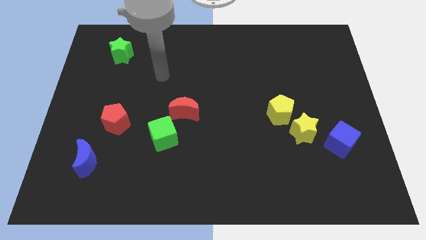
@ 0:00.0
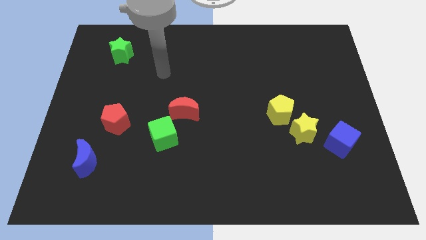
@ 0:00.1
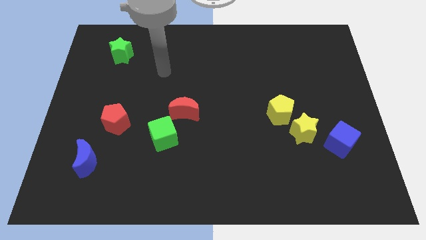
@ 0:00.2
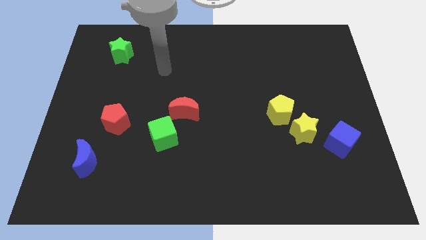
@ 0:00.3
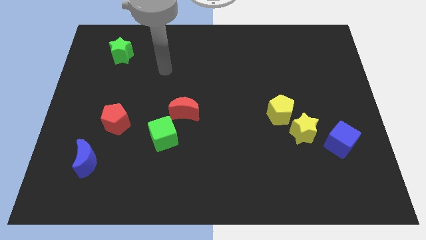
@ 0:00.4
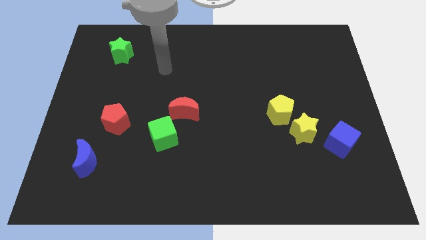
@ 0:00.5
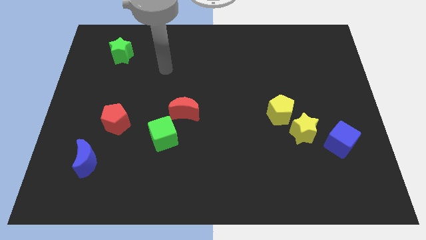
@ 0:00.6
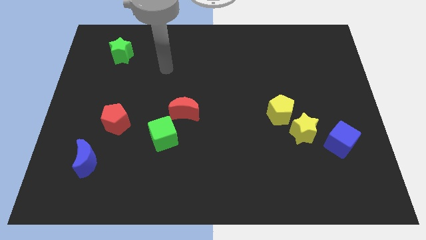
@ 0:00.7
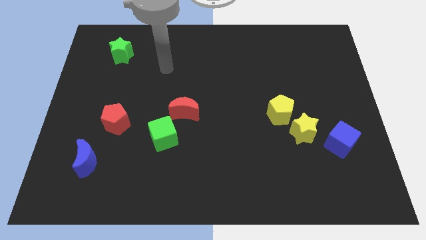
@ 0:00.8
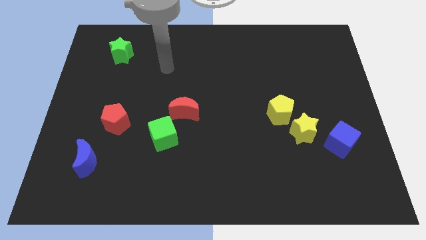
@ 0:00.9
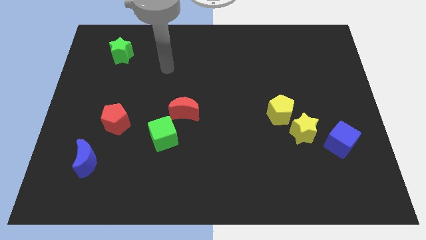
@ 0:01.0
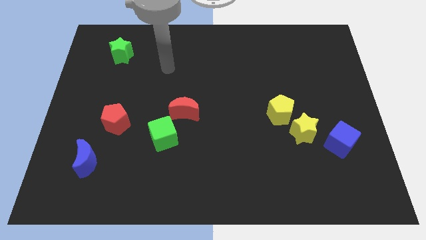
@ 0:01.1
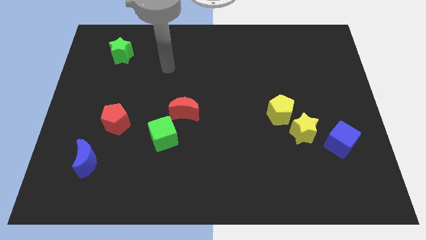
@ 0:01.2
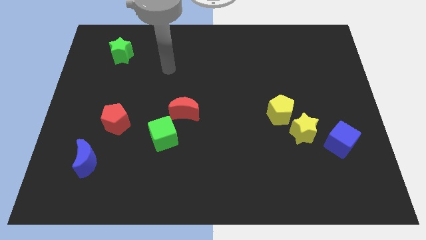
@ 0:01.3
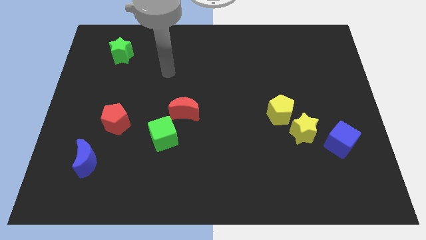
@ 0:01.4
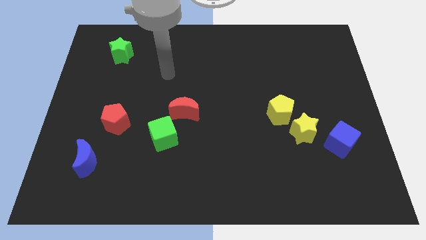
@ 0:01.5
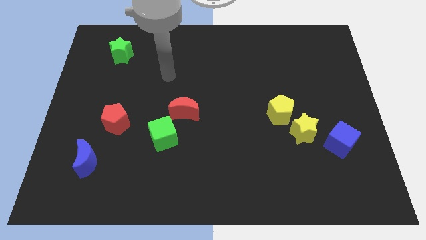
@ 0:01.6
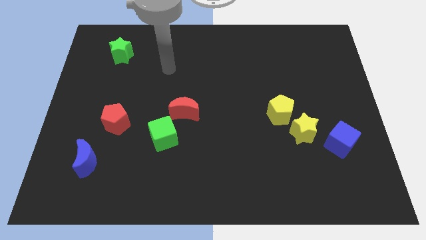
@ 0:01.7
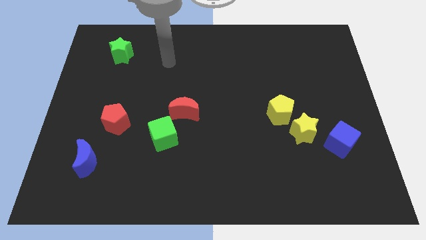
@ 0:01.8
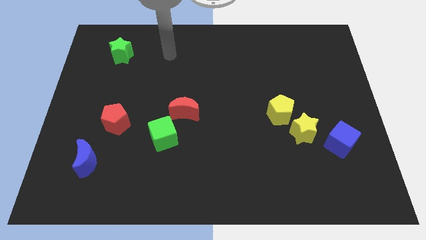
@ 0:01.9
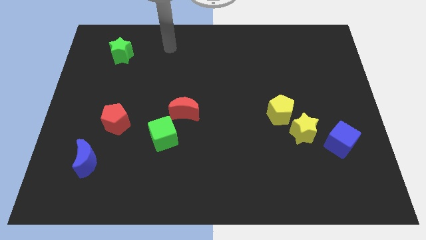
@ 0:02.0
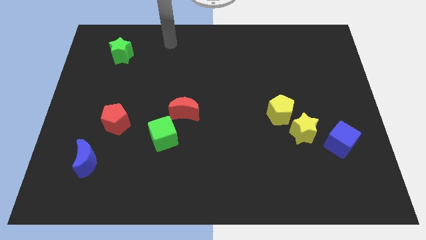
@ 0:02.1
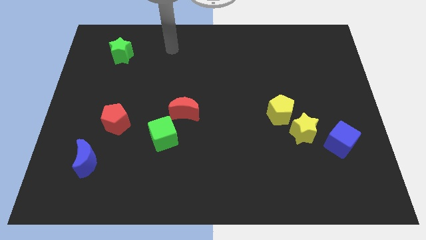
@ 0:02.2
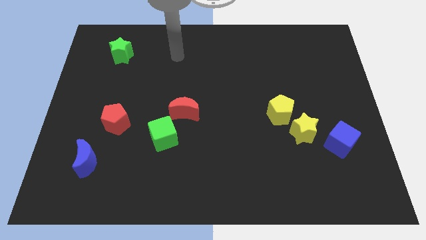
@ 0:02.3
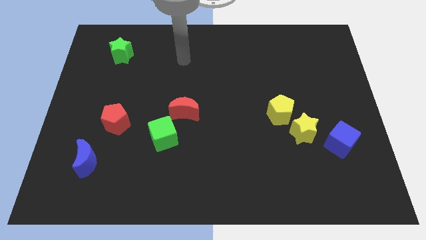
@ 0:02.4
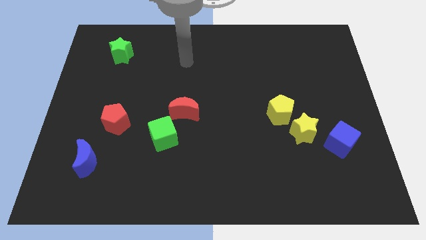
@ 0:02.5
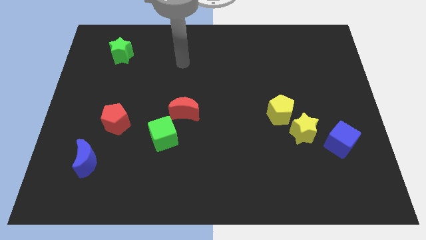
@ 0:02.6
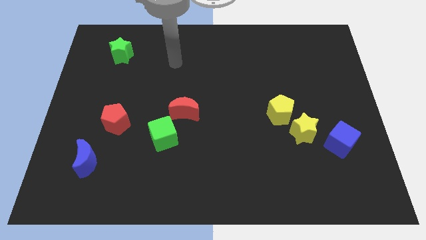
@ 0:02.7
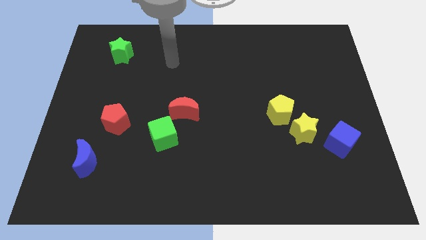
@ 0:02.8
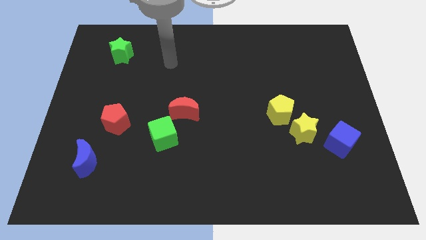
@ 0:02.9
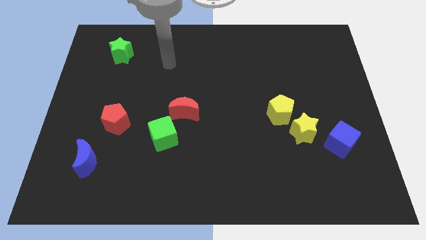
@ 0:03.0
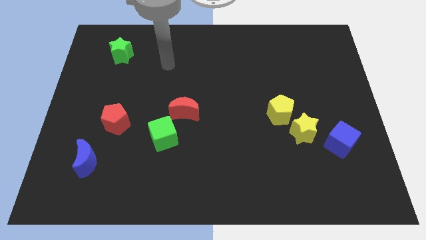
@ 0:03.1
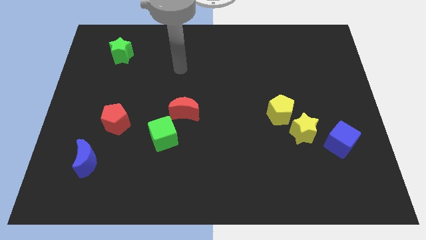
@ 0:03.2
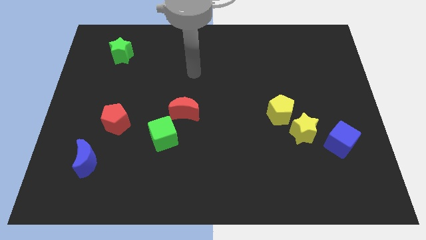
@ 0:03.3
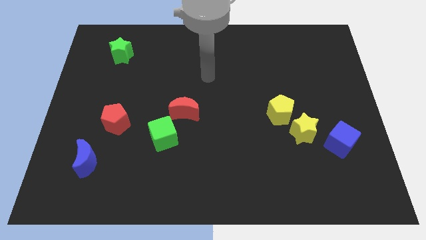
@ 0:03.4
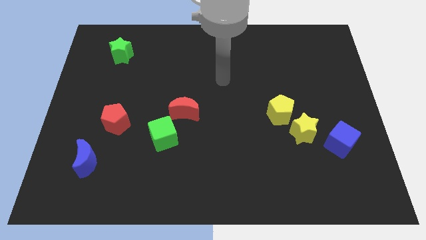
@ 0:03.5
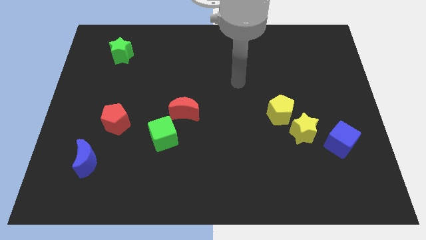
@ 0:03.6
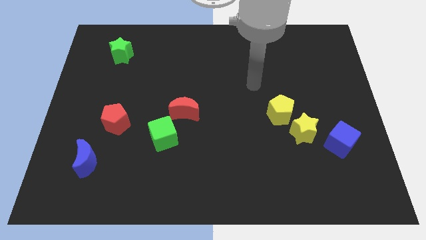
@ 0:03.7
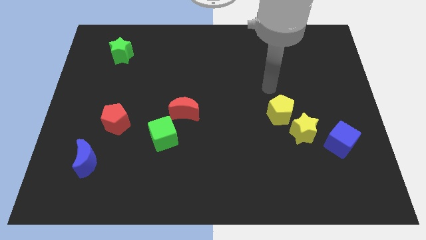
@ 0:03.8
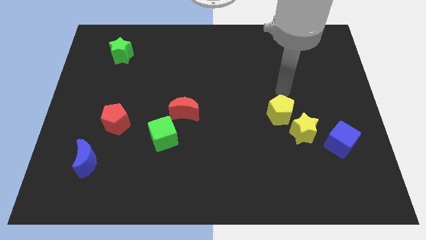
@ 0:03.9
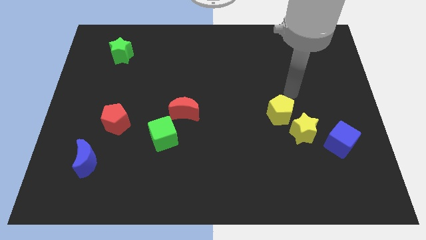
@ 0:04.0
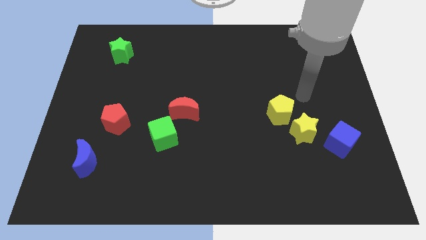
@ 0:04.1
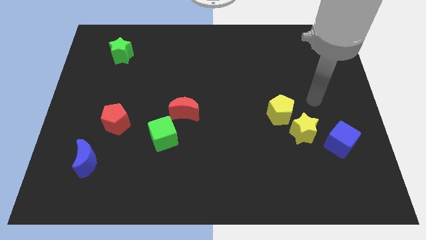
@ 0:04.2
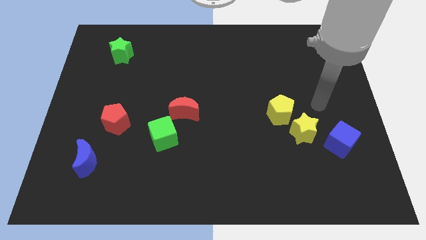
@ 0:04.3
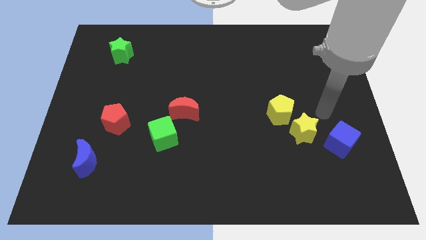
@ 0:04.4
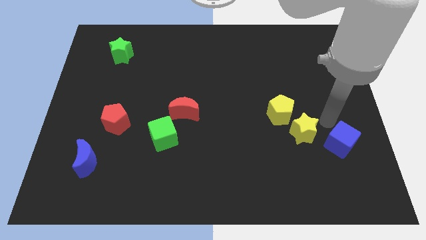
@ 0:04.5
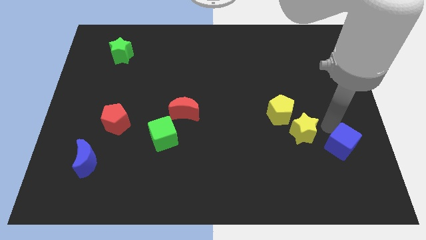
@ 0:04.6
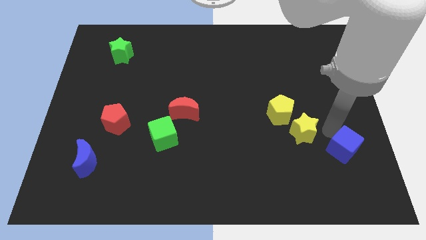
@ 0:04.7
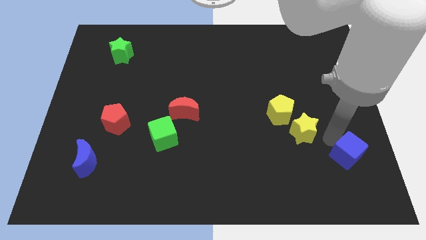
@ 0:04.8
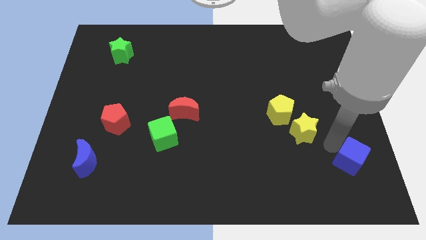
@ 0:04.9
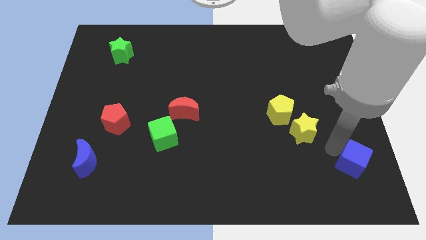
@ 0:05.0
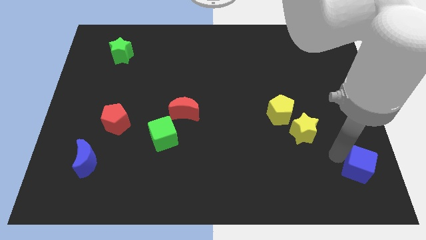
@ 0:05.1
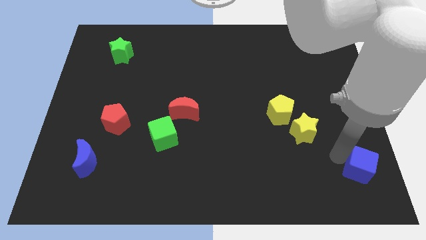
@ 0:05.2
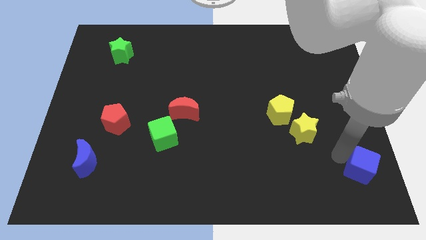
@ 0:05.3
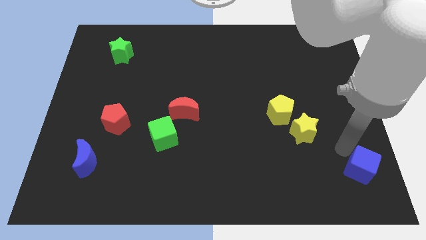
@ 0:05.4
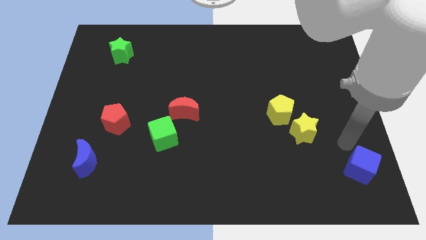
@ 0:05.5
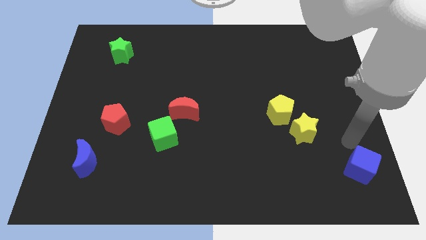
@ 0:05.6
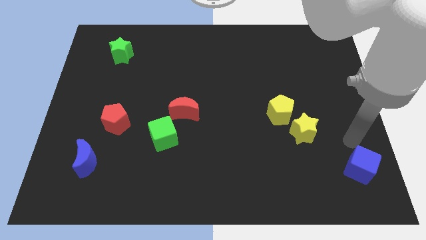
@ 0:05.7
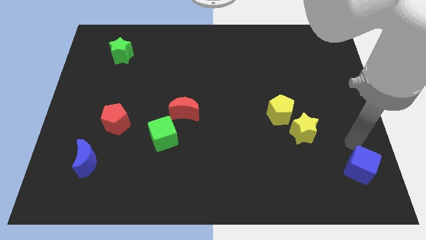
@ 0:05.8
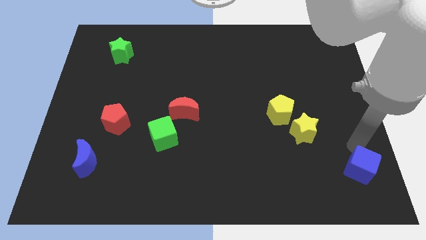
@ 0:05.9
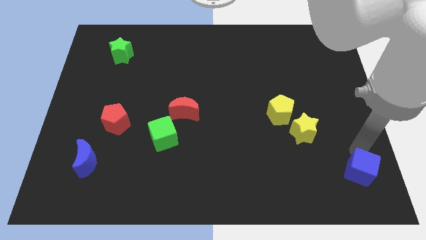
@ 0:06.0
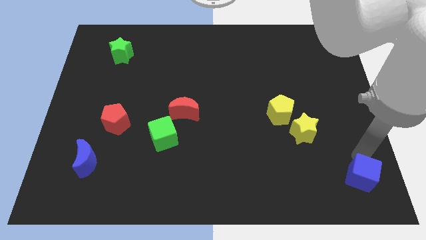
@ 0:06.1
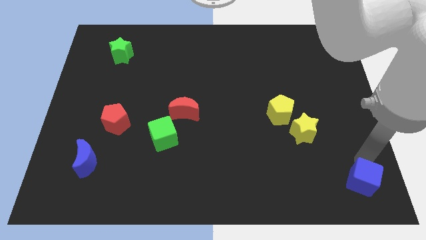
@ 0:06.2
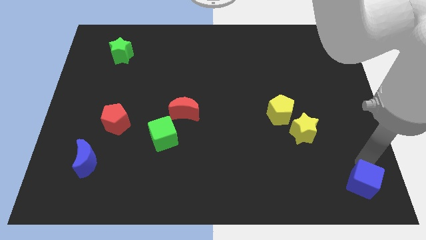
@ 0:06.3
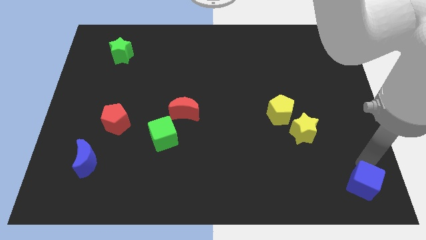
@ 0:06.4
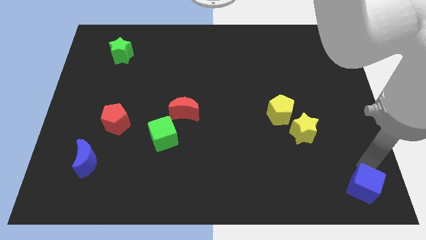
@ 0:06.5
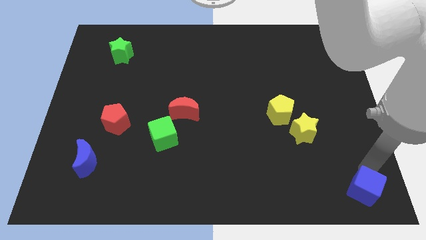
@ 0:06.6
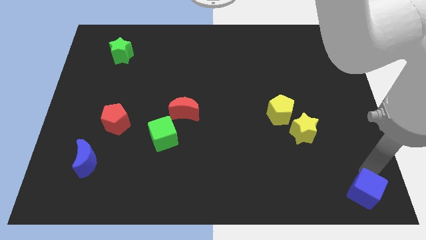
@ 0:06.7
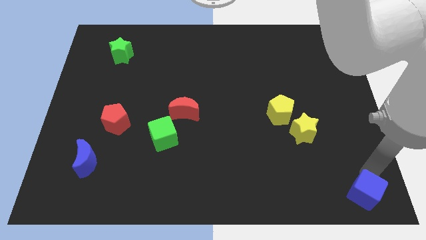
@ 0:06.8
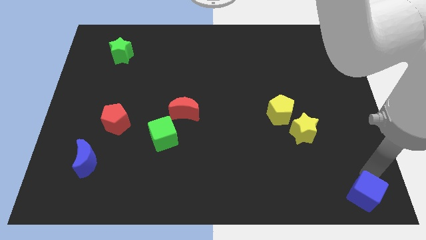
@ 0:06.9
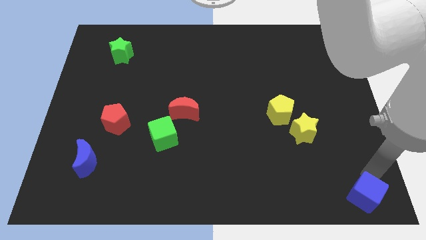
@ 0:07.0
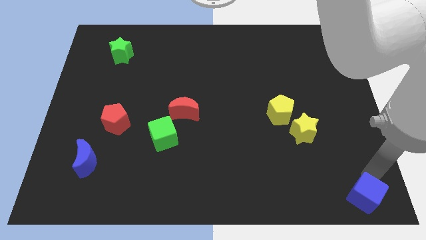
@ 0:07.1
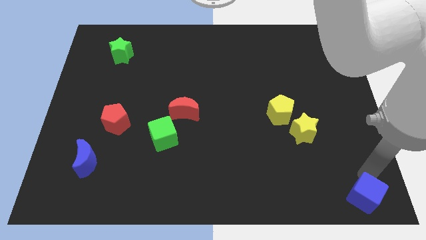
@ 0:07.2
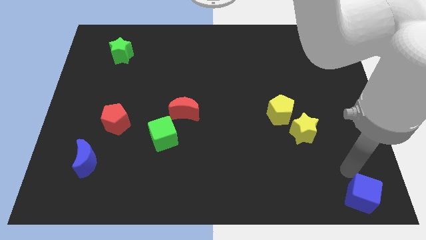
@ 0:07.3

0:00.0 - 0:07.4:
move the blue cube at the bottom right corner of the board

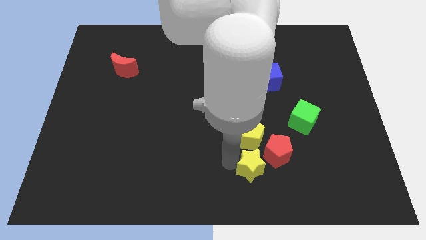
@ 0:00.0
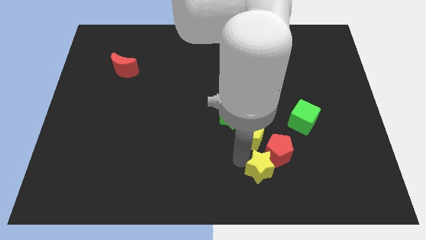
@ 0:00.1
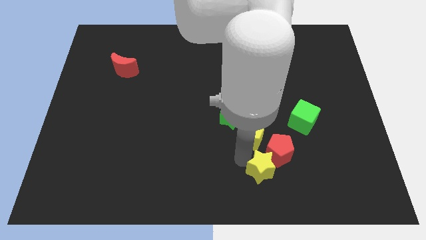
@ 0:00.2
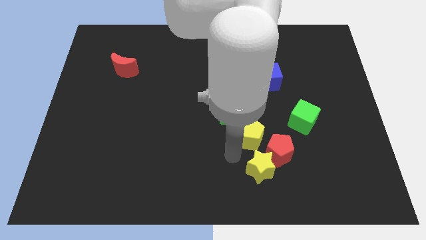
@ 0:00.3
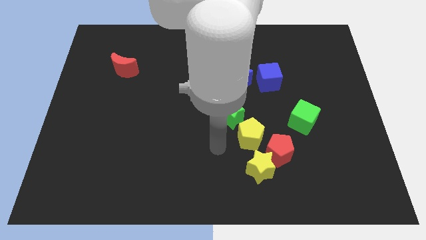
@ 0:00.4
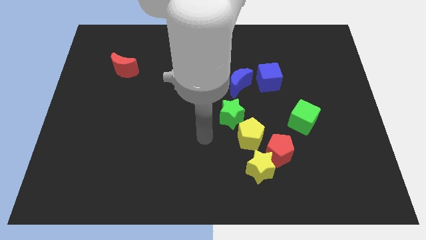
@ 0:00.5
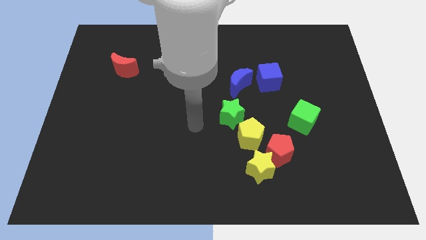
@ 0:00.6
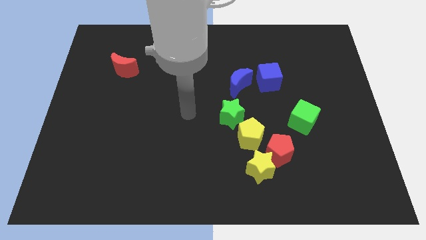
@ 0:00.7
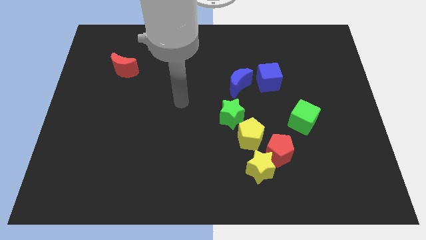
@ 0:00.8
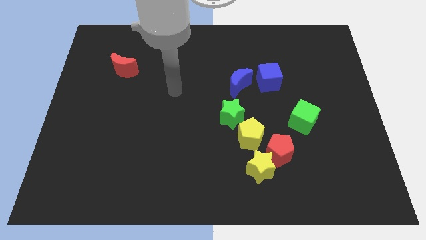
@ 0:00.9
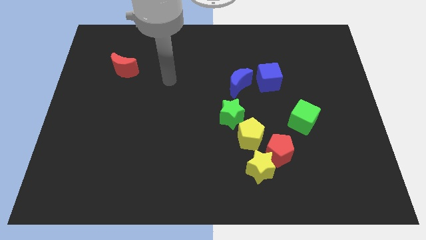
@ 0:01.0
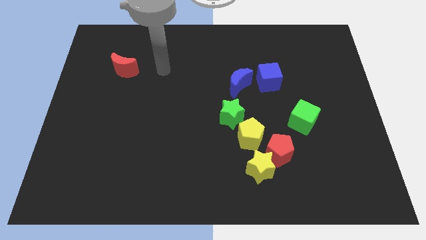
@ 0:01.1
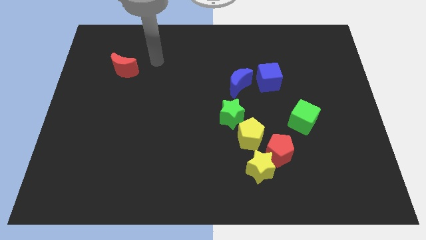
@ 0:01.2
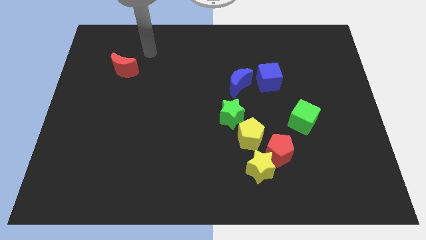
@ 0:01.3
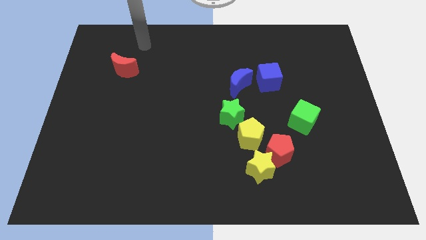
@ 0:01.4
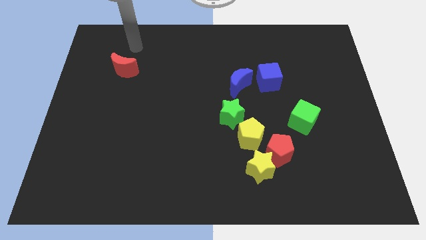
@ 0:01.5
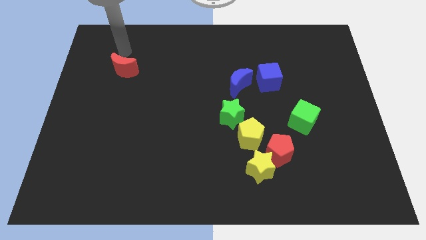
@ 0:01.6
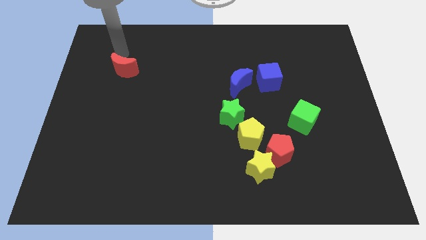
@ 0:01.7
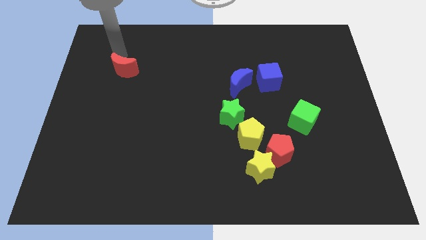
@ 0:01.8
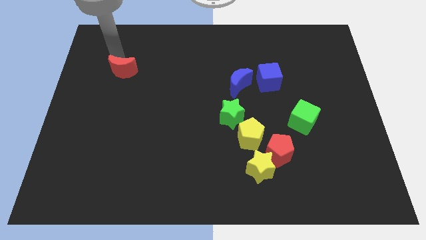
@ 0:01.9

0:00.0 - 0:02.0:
move your arm to the red moon
